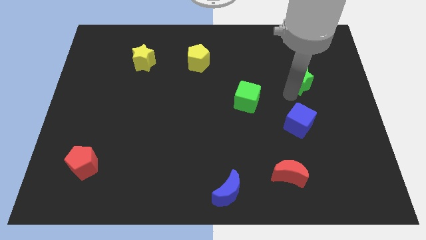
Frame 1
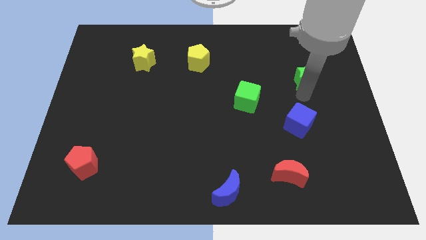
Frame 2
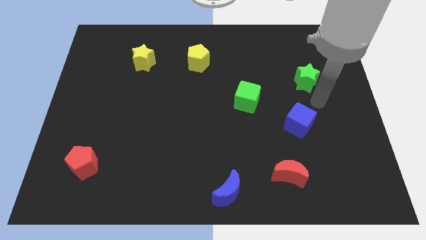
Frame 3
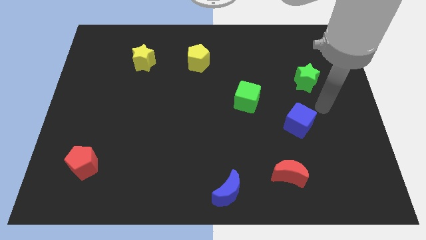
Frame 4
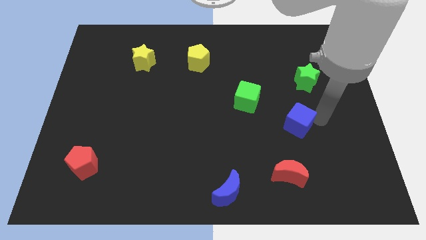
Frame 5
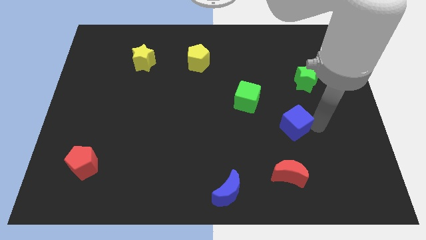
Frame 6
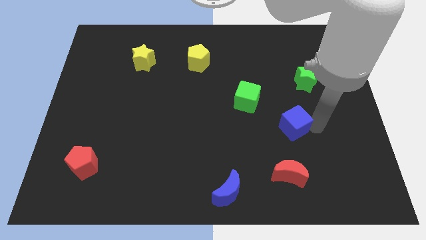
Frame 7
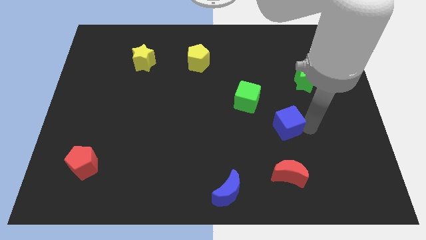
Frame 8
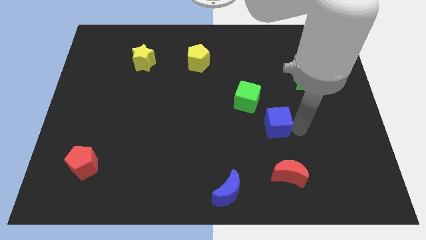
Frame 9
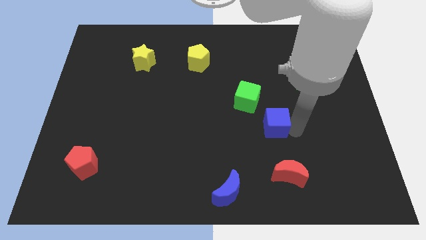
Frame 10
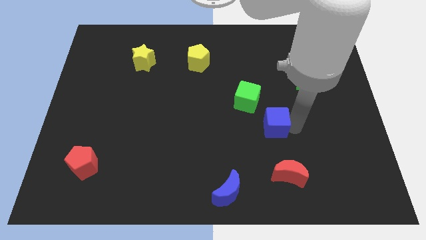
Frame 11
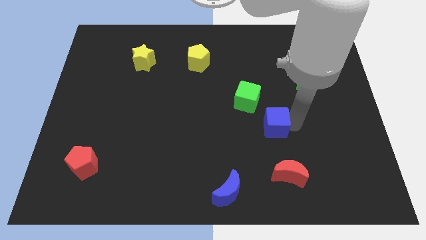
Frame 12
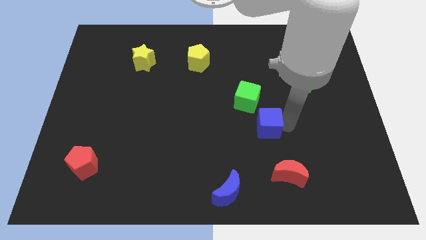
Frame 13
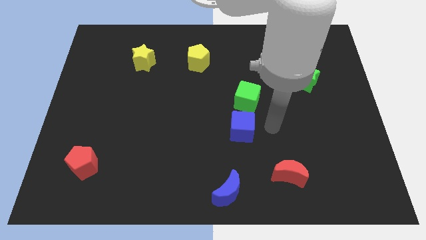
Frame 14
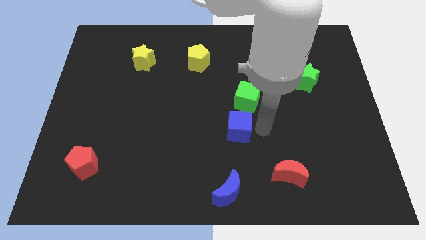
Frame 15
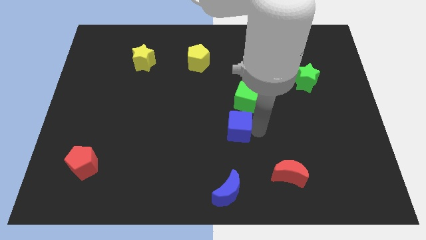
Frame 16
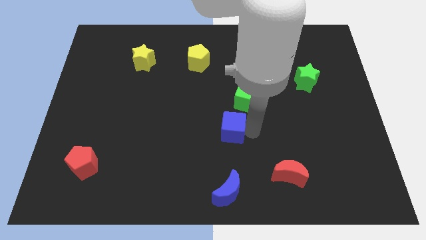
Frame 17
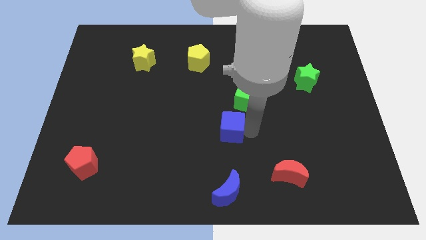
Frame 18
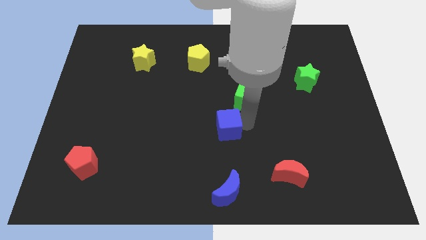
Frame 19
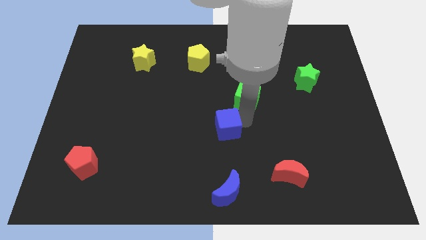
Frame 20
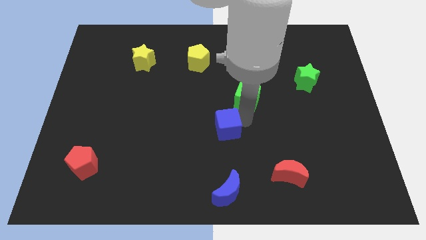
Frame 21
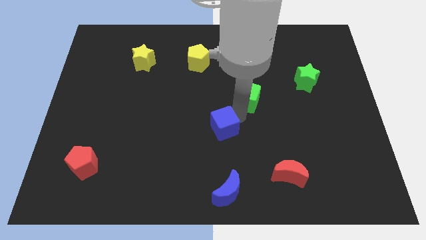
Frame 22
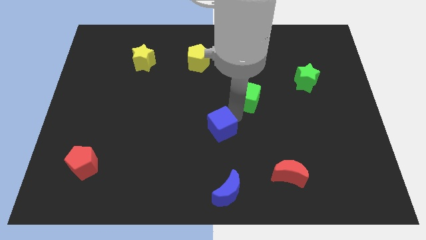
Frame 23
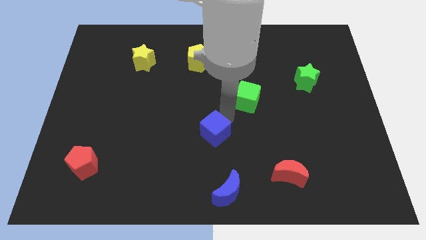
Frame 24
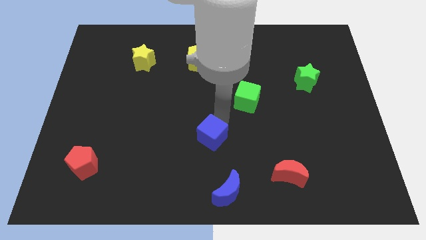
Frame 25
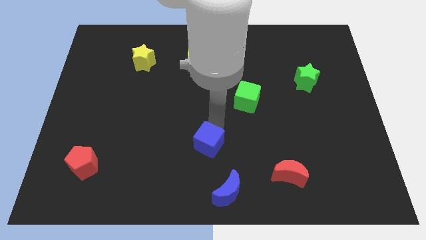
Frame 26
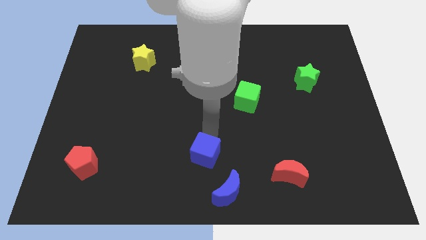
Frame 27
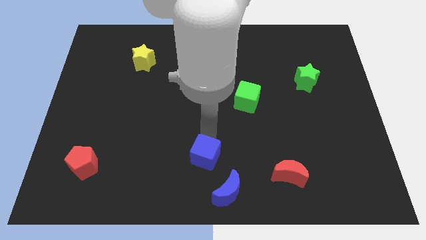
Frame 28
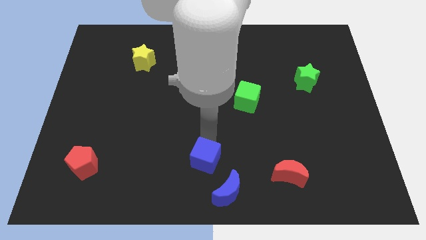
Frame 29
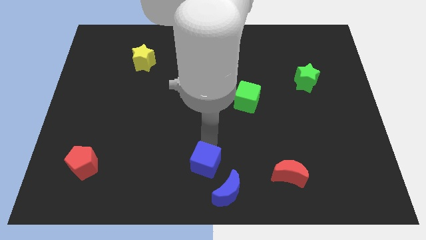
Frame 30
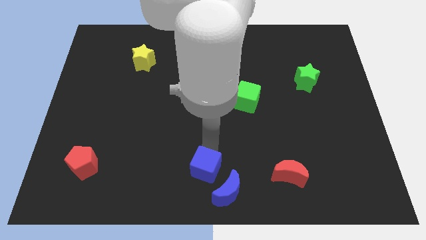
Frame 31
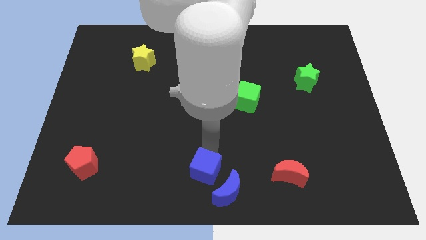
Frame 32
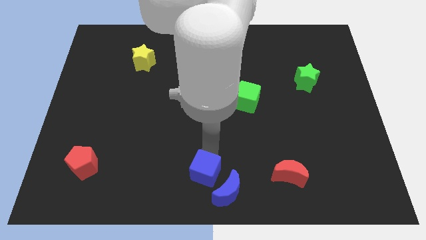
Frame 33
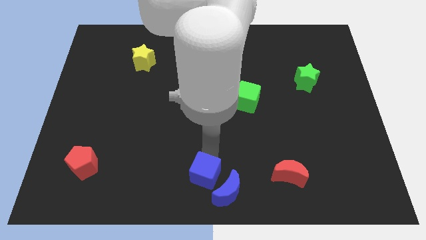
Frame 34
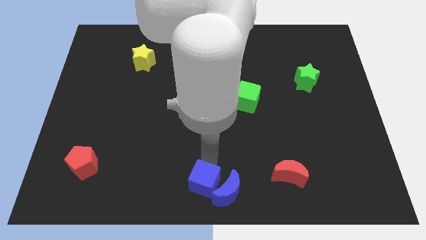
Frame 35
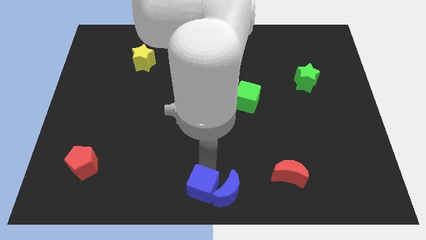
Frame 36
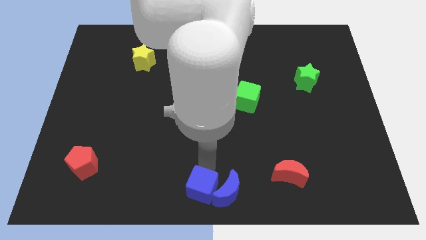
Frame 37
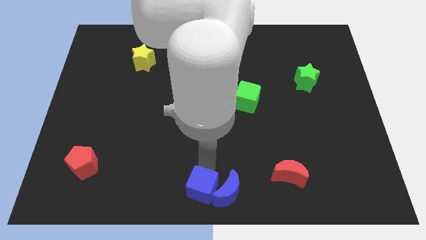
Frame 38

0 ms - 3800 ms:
slide the blue cube into the left side of the blue moon

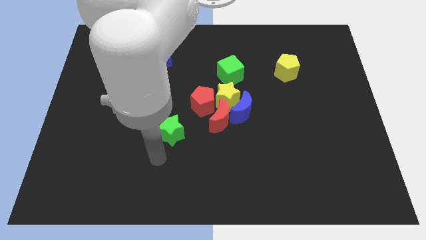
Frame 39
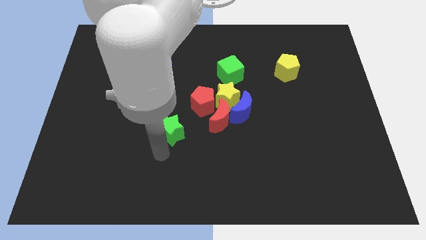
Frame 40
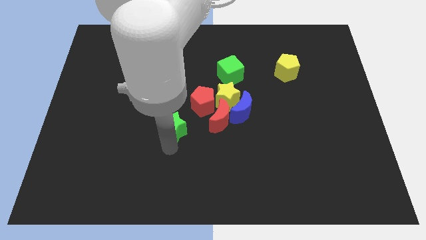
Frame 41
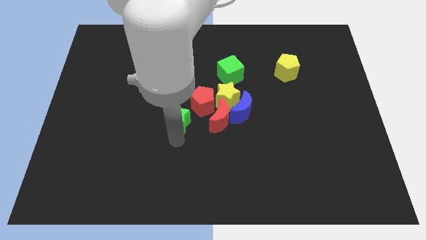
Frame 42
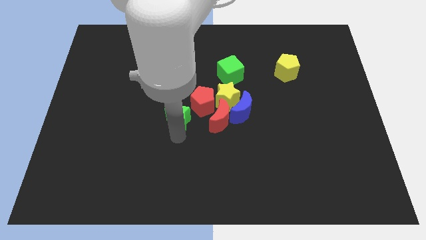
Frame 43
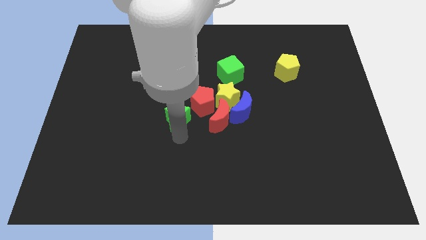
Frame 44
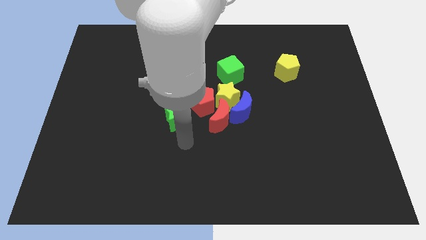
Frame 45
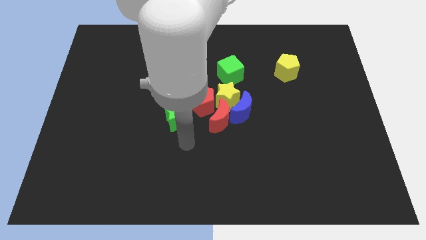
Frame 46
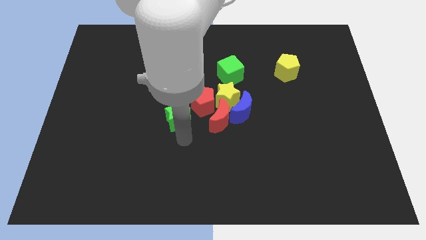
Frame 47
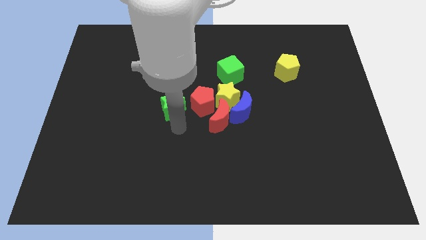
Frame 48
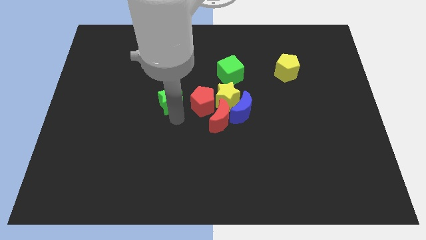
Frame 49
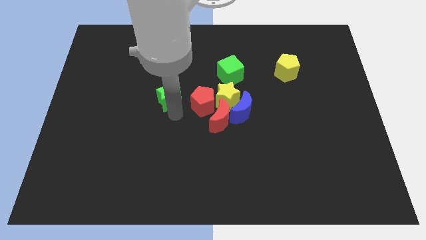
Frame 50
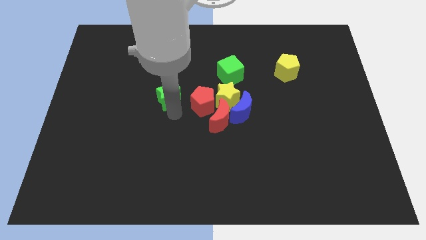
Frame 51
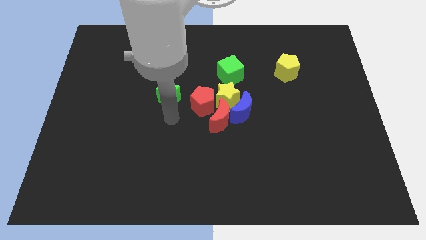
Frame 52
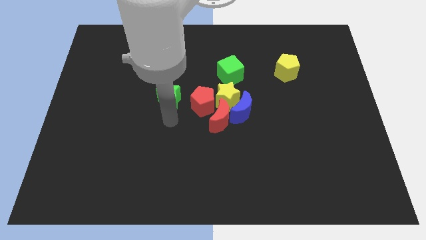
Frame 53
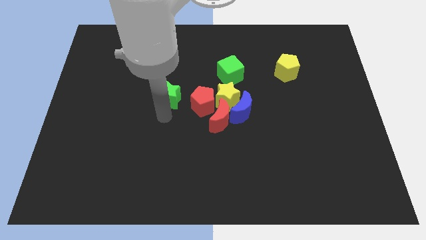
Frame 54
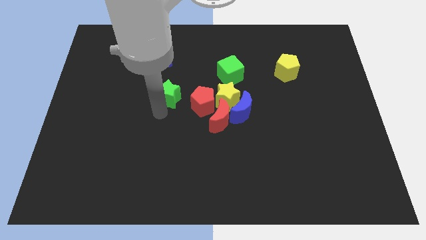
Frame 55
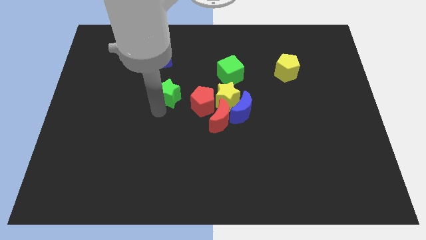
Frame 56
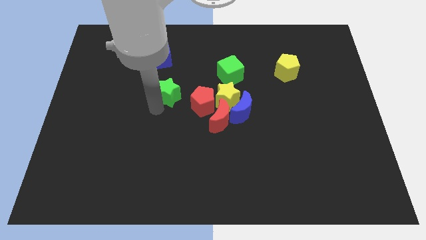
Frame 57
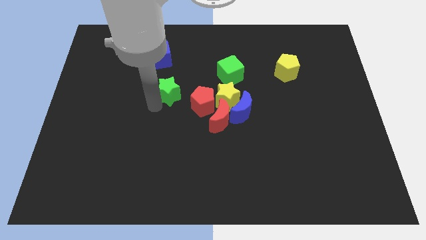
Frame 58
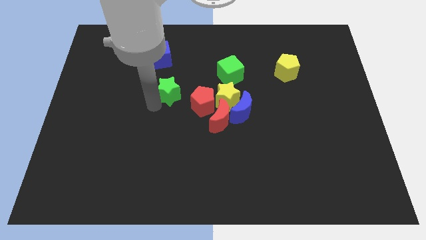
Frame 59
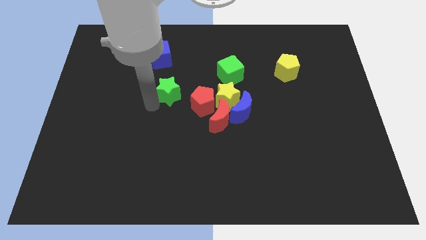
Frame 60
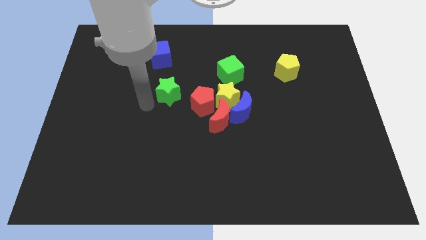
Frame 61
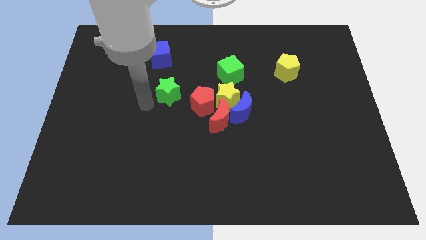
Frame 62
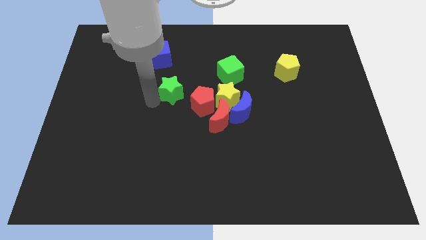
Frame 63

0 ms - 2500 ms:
place green star towards upward

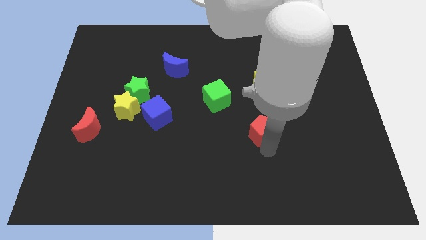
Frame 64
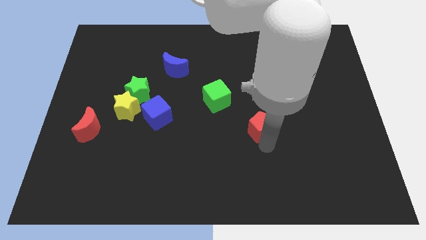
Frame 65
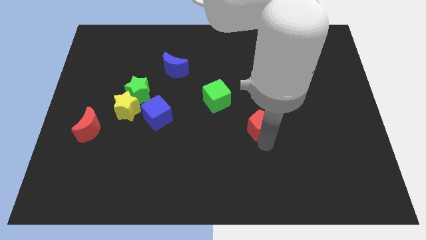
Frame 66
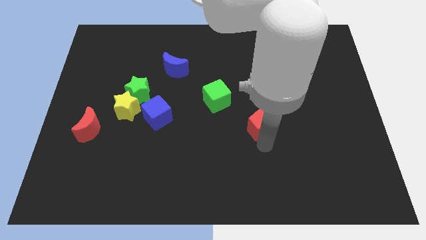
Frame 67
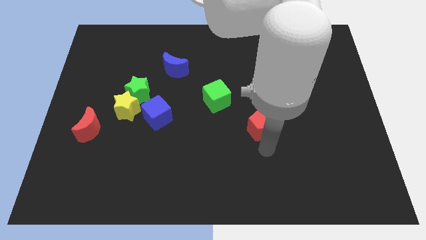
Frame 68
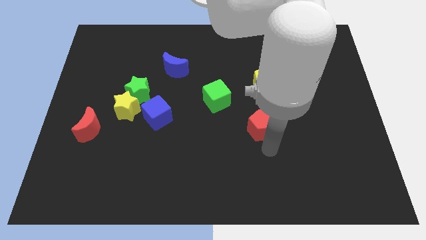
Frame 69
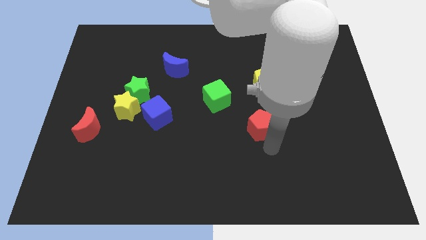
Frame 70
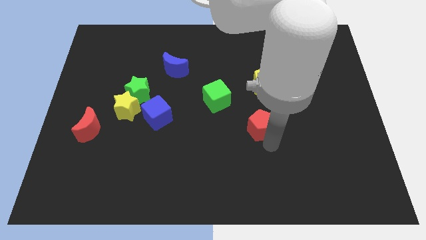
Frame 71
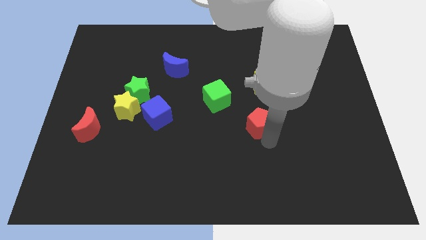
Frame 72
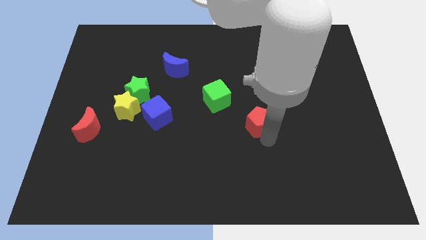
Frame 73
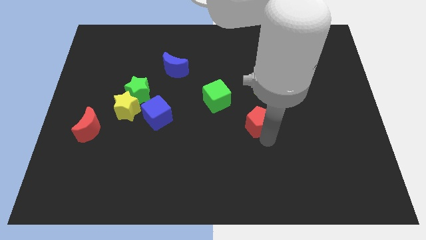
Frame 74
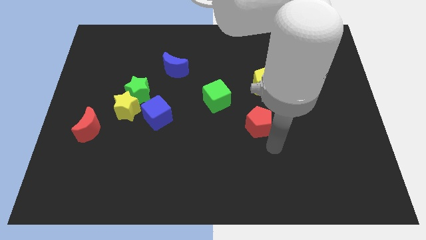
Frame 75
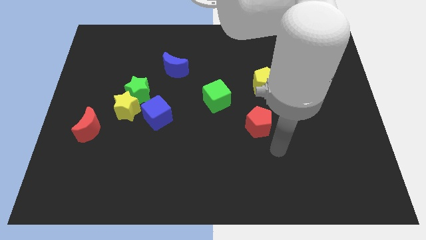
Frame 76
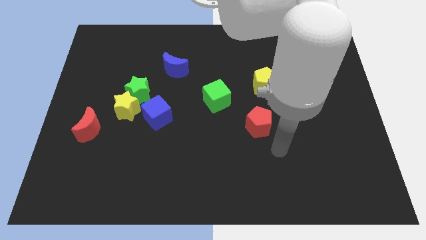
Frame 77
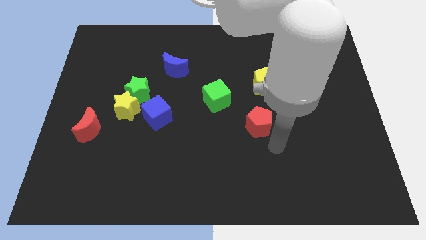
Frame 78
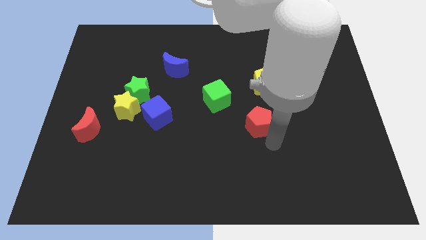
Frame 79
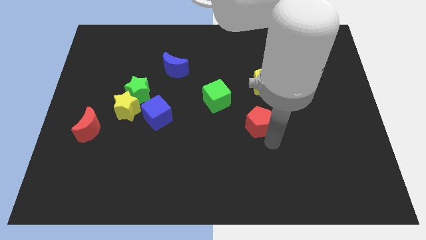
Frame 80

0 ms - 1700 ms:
slightly move the red pentagon to the top

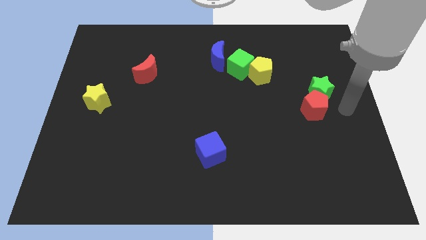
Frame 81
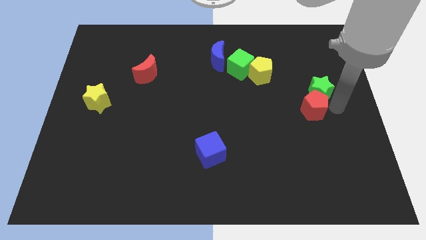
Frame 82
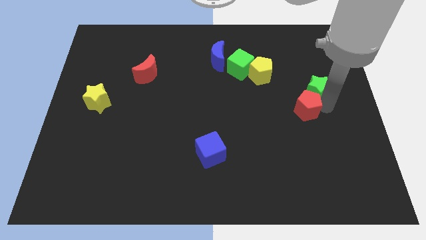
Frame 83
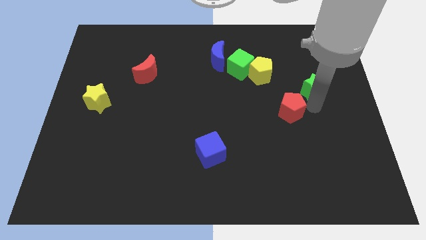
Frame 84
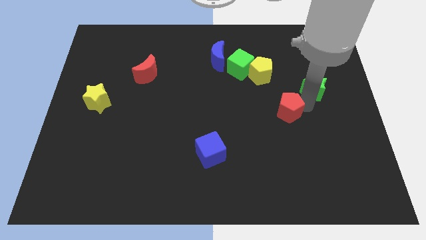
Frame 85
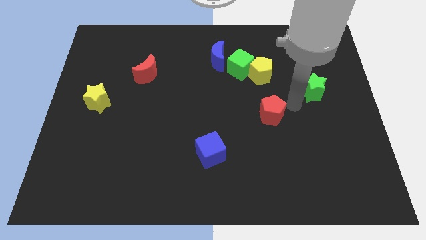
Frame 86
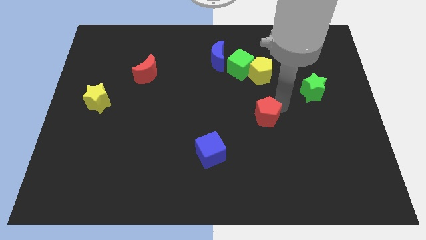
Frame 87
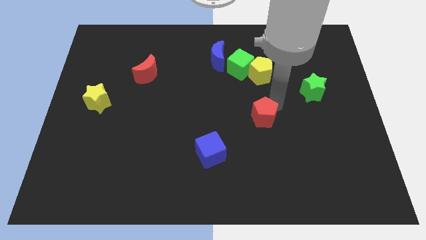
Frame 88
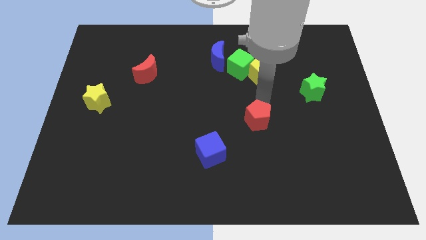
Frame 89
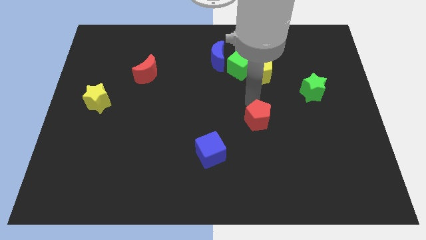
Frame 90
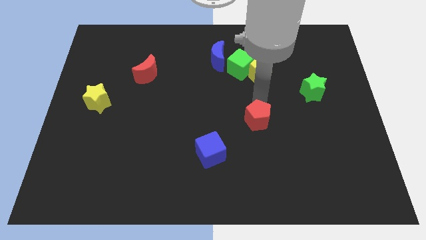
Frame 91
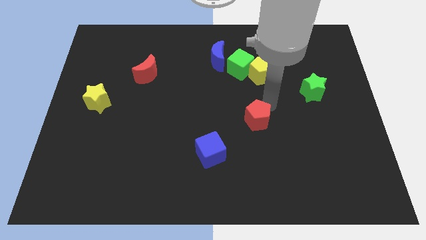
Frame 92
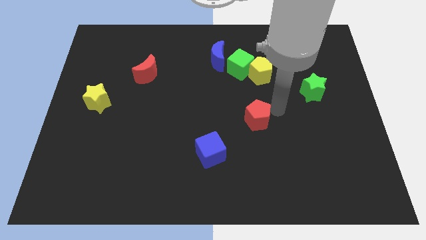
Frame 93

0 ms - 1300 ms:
push the red pentagon below yellow pentagon
